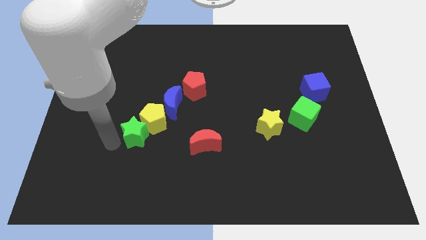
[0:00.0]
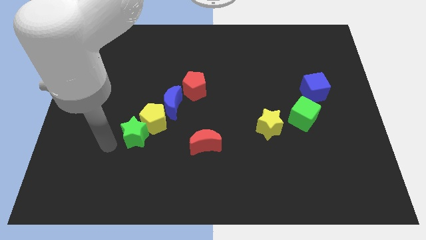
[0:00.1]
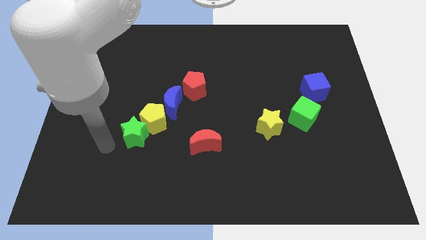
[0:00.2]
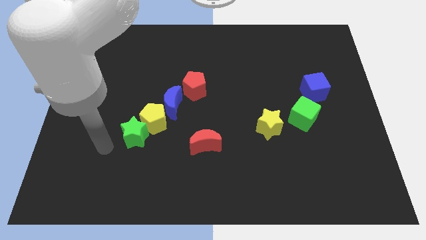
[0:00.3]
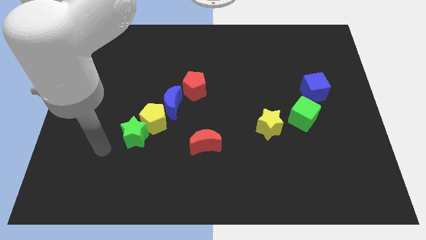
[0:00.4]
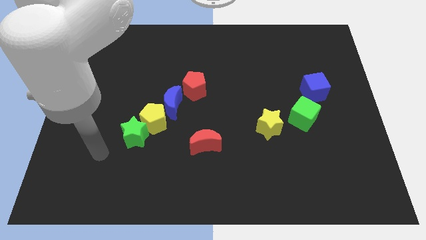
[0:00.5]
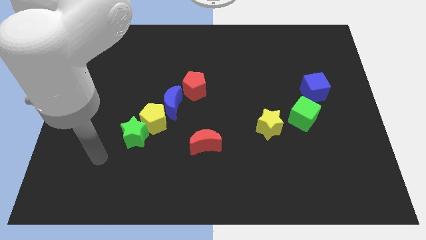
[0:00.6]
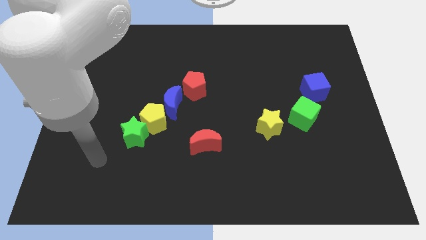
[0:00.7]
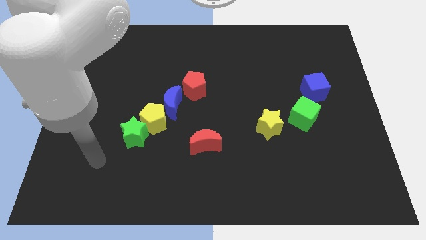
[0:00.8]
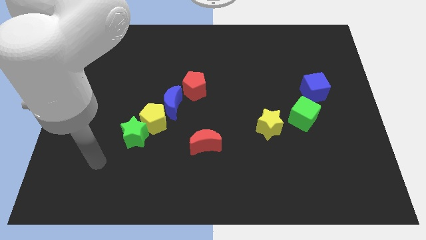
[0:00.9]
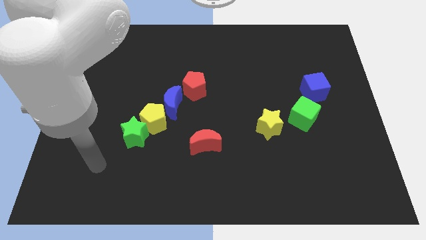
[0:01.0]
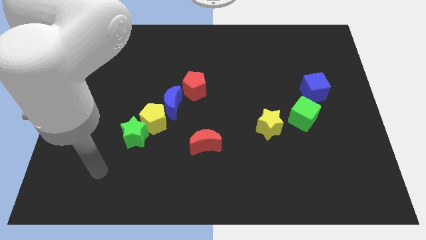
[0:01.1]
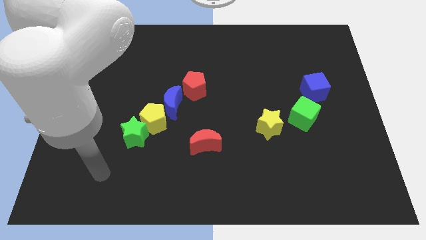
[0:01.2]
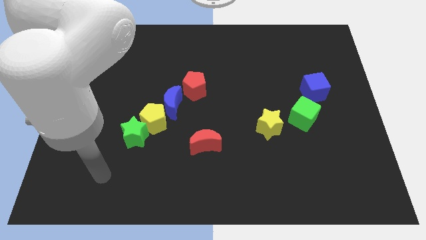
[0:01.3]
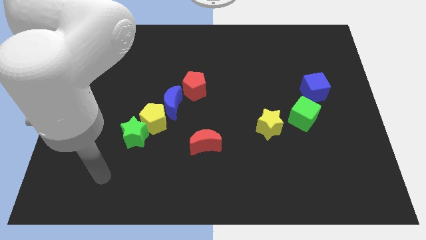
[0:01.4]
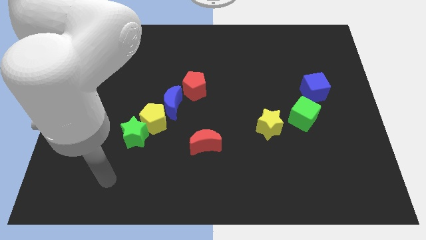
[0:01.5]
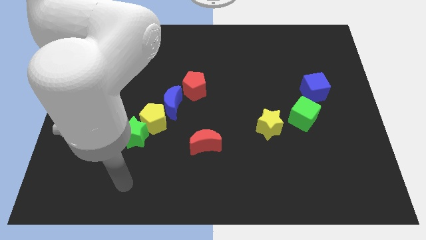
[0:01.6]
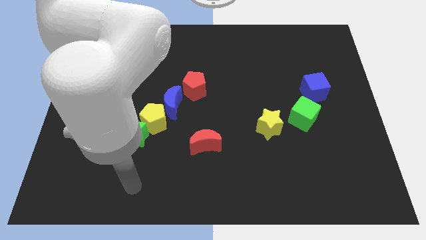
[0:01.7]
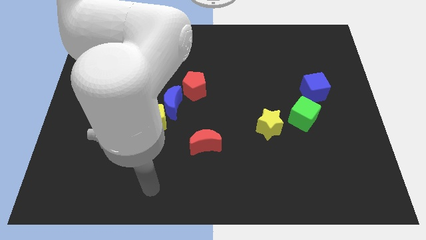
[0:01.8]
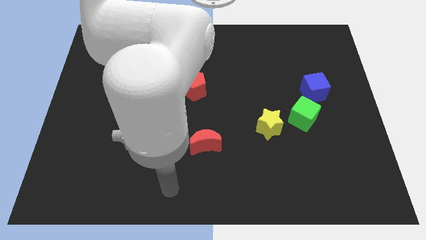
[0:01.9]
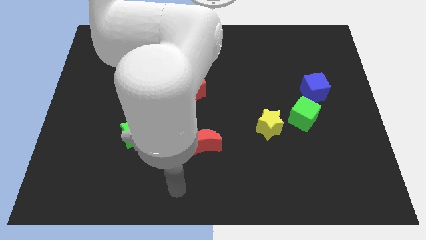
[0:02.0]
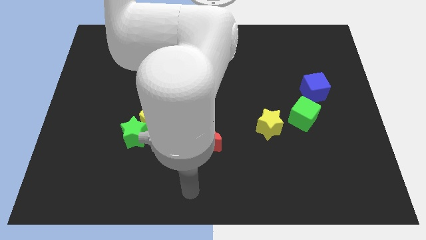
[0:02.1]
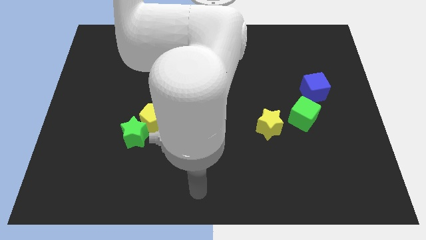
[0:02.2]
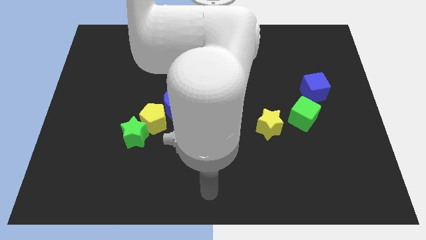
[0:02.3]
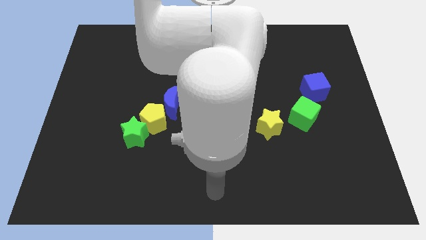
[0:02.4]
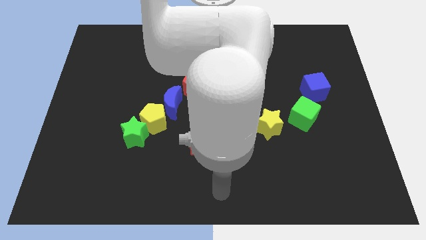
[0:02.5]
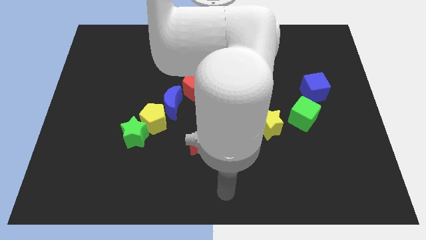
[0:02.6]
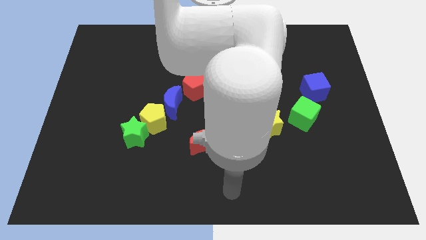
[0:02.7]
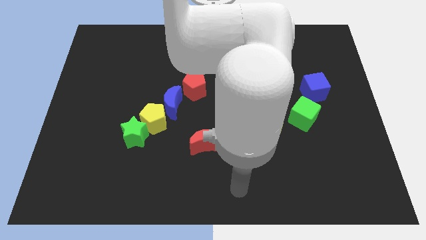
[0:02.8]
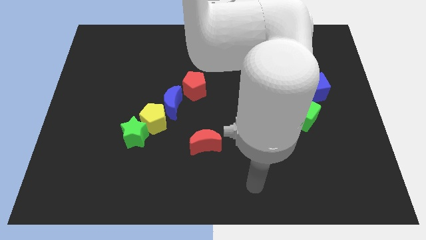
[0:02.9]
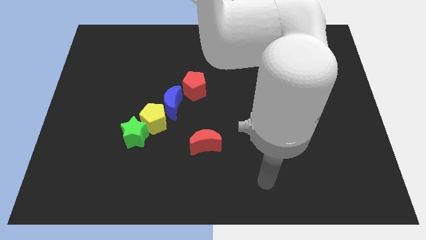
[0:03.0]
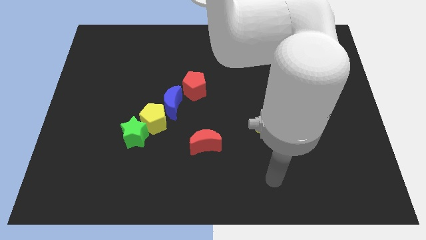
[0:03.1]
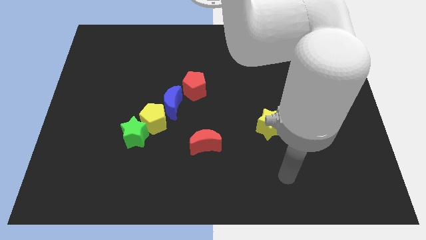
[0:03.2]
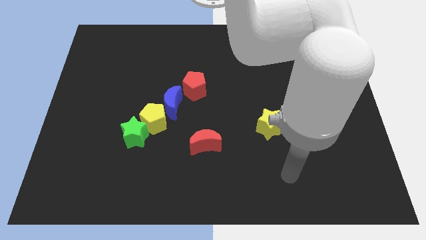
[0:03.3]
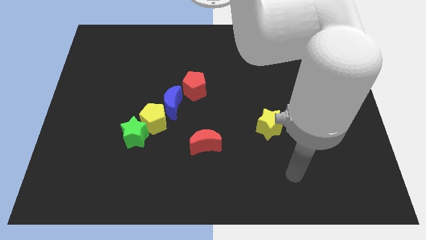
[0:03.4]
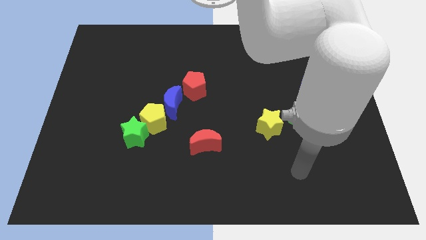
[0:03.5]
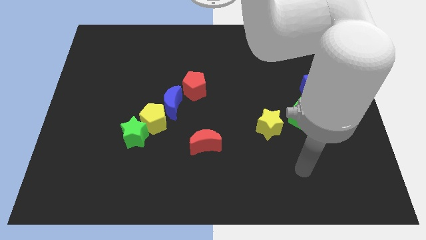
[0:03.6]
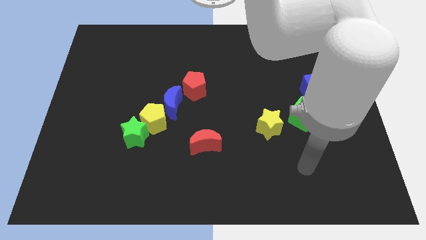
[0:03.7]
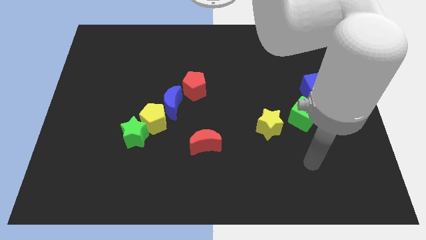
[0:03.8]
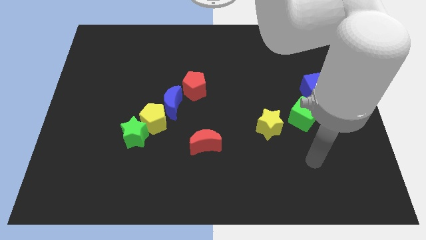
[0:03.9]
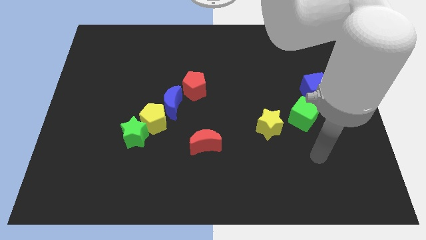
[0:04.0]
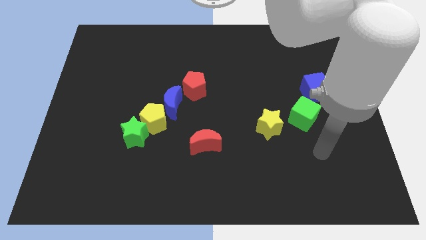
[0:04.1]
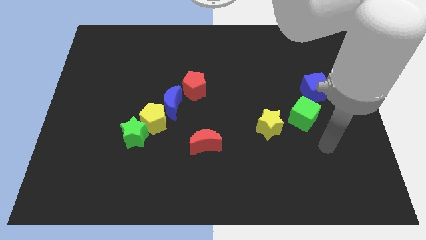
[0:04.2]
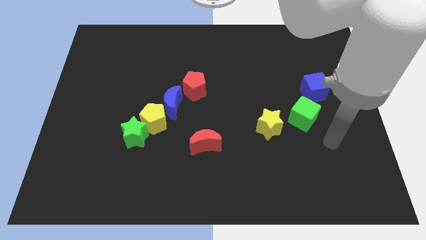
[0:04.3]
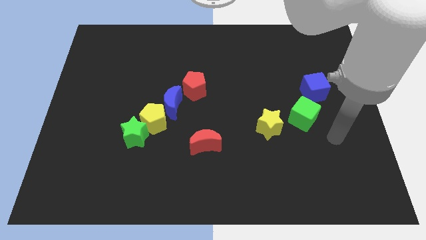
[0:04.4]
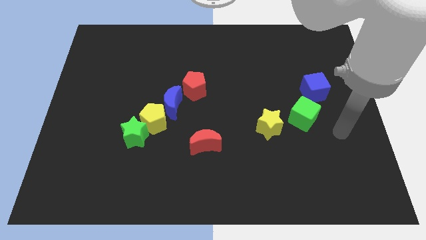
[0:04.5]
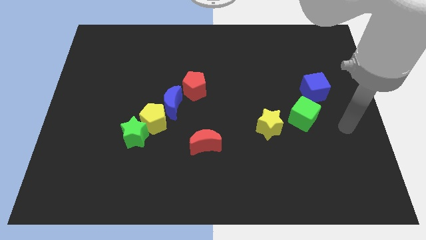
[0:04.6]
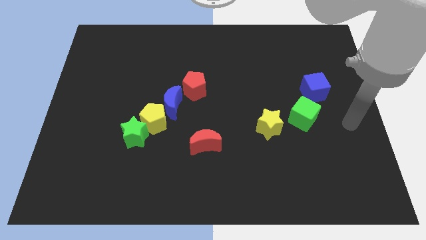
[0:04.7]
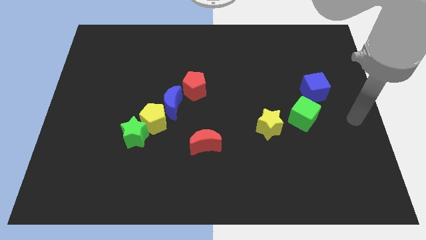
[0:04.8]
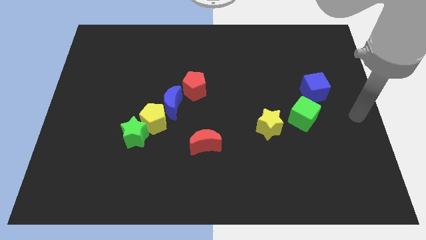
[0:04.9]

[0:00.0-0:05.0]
go and point your at the right of the green cube

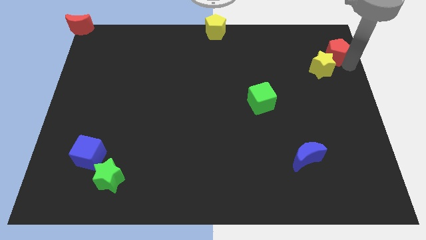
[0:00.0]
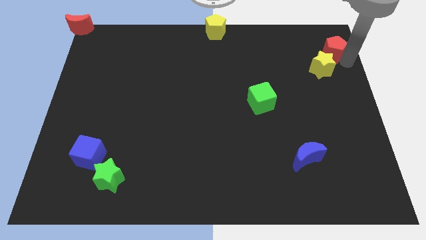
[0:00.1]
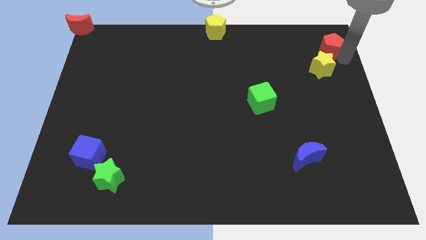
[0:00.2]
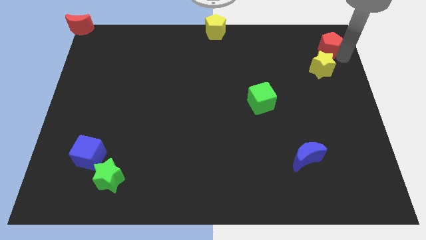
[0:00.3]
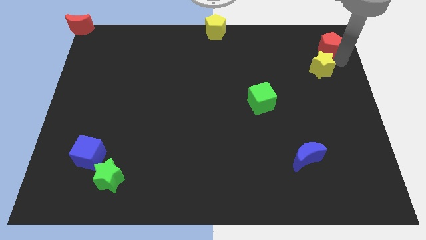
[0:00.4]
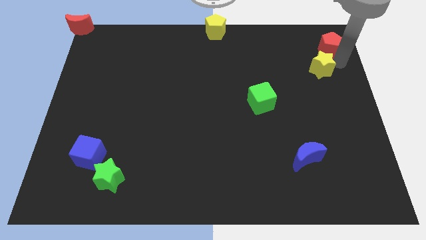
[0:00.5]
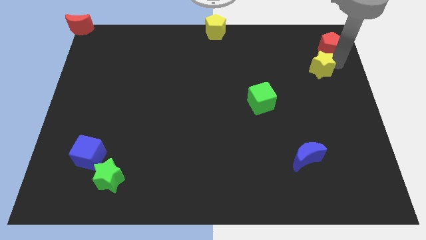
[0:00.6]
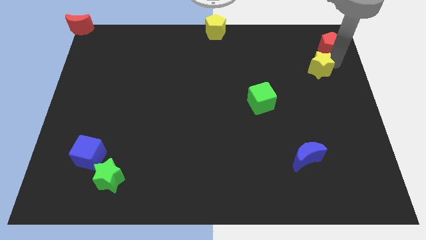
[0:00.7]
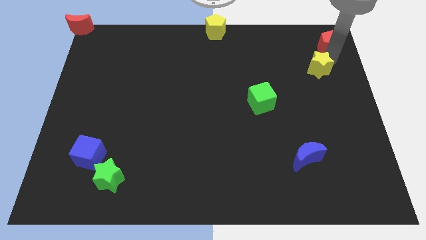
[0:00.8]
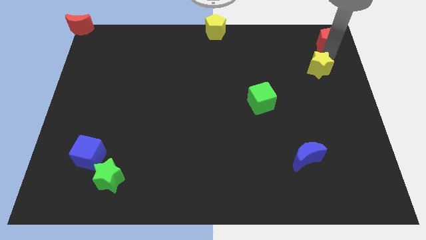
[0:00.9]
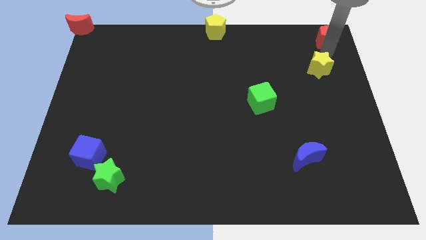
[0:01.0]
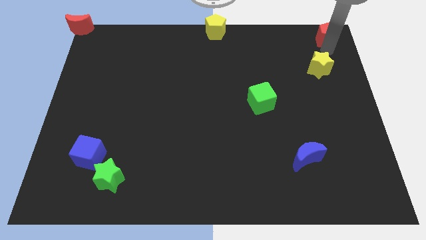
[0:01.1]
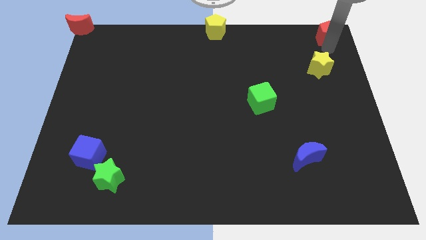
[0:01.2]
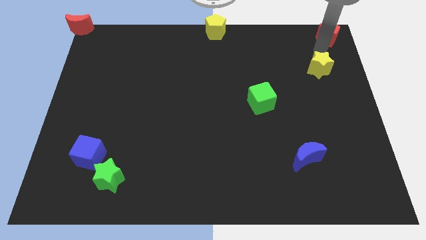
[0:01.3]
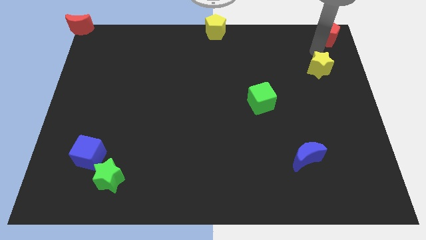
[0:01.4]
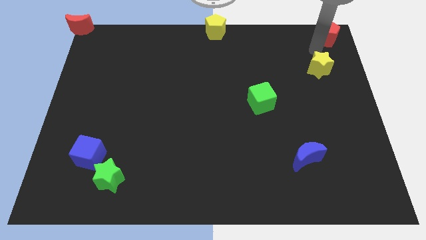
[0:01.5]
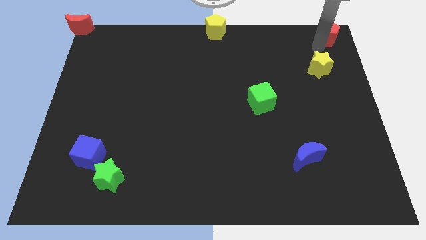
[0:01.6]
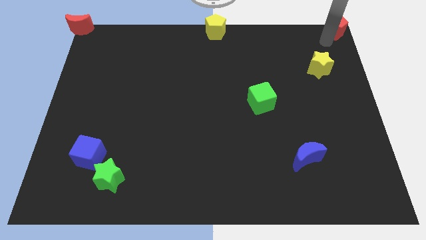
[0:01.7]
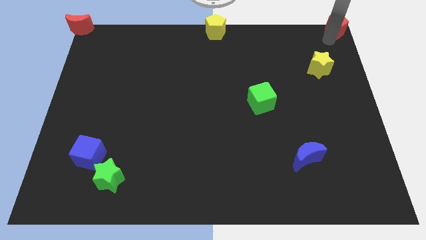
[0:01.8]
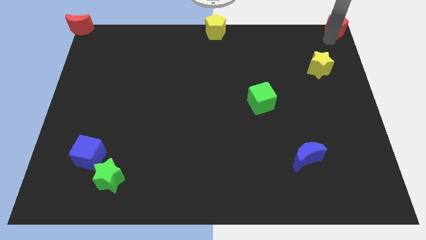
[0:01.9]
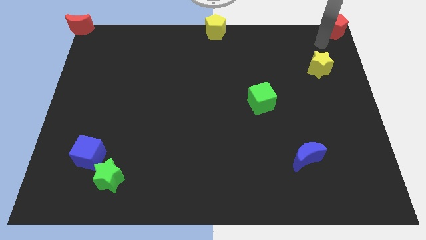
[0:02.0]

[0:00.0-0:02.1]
move the red pentagon to the top right of the board

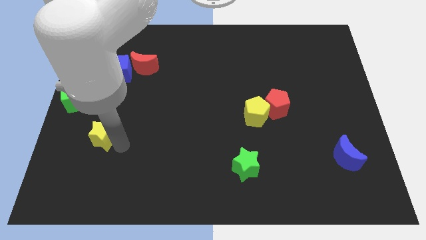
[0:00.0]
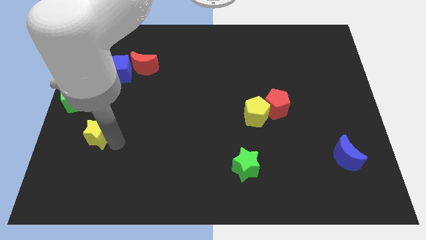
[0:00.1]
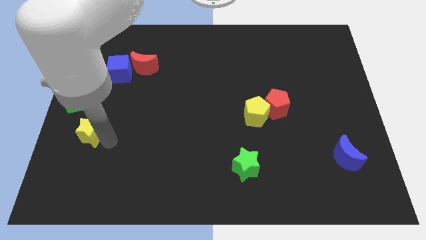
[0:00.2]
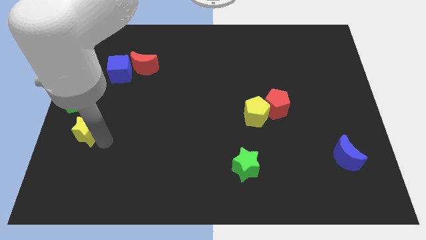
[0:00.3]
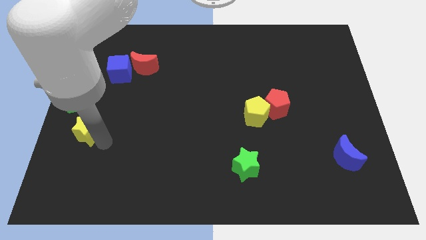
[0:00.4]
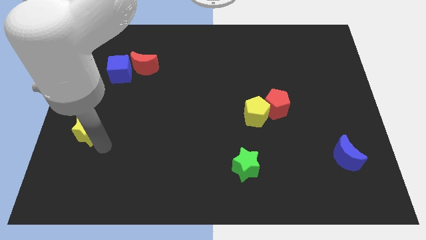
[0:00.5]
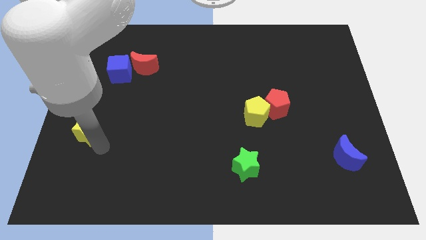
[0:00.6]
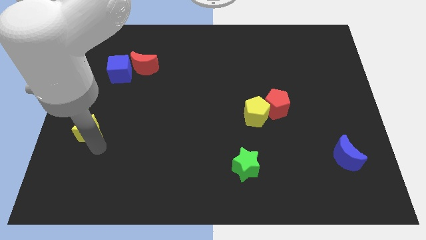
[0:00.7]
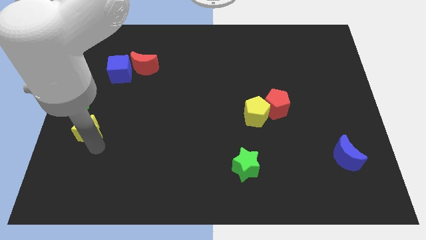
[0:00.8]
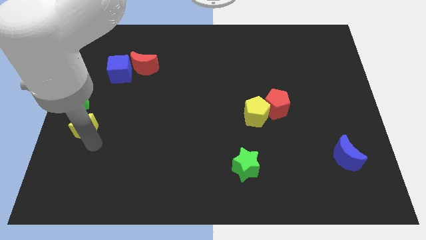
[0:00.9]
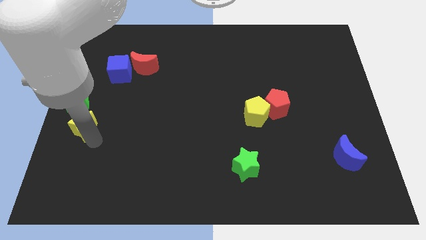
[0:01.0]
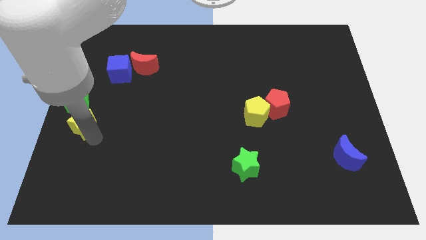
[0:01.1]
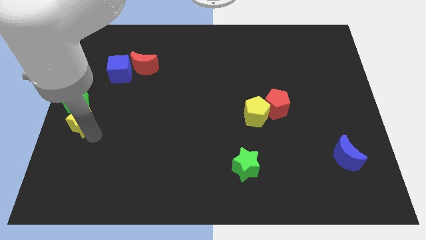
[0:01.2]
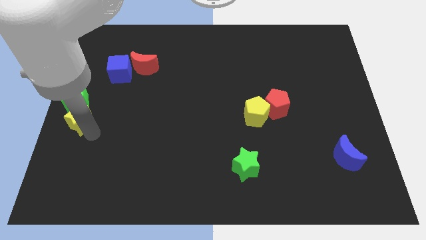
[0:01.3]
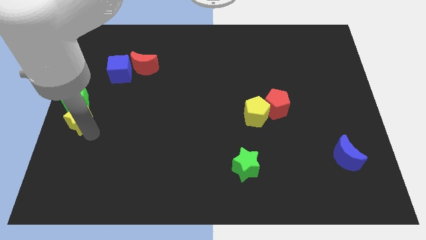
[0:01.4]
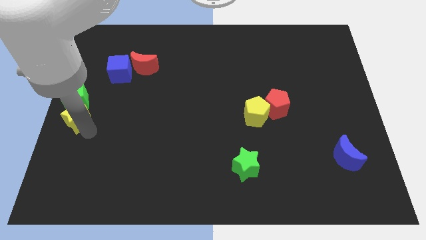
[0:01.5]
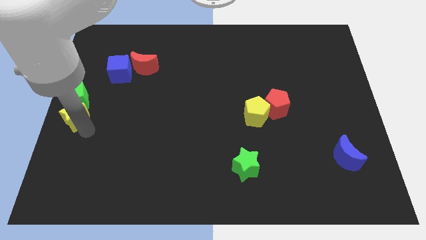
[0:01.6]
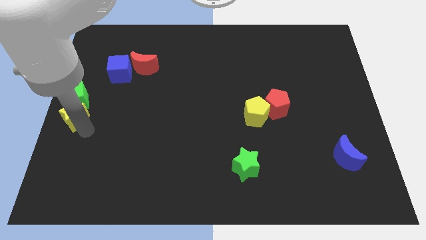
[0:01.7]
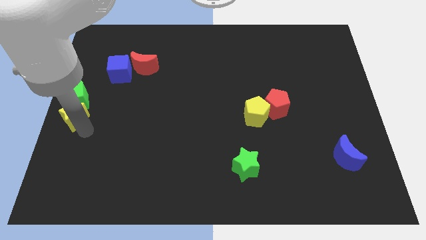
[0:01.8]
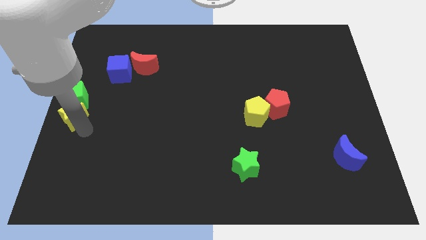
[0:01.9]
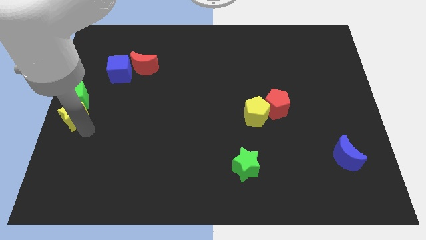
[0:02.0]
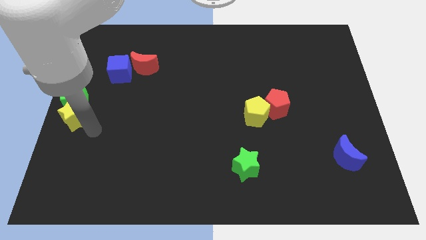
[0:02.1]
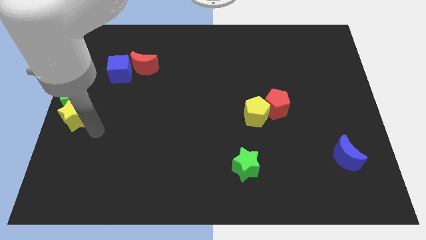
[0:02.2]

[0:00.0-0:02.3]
place the yellow star below into green cube
